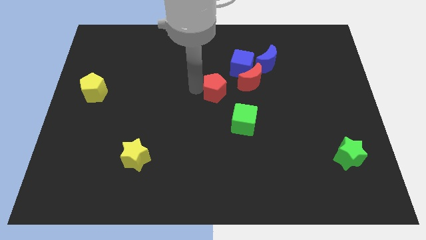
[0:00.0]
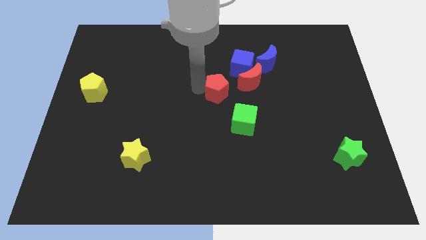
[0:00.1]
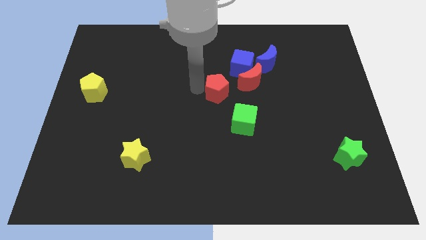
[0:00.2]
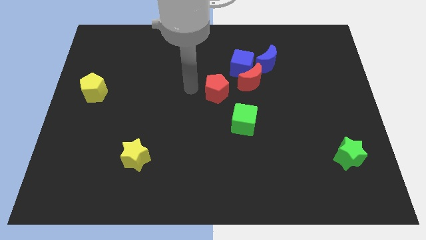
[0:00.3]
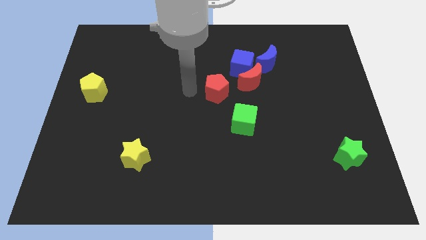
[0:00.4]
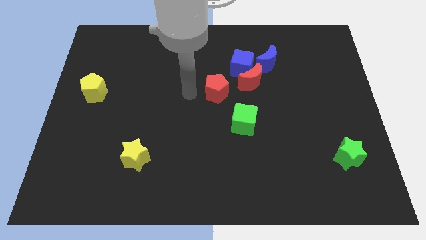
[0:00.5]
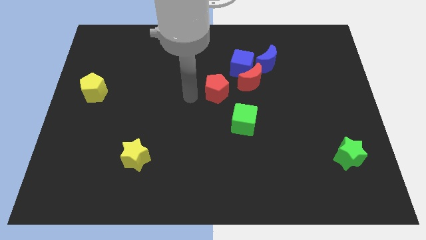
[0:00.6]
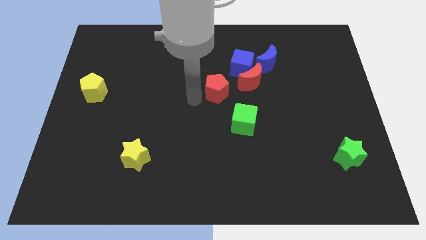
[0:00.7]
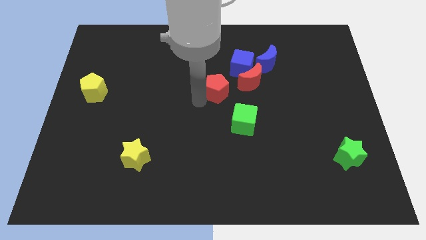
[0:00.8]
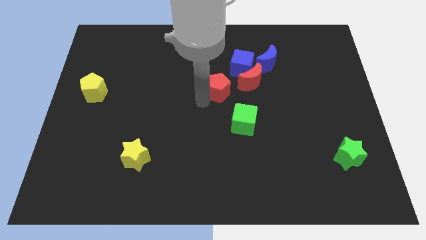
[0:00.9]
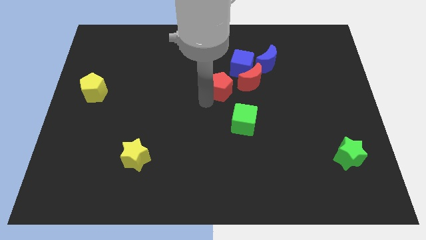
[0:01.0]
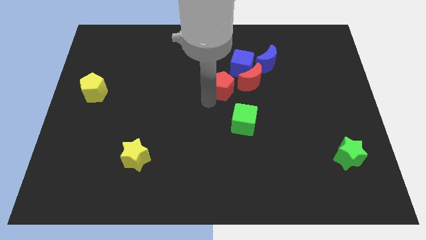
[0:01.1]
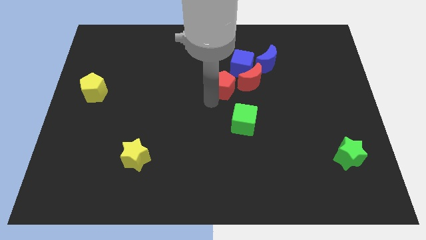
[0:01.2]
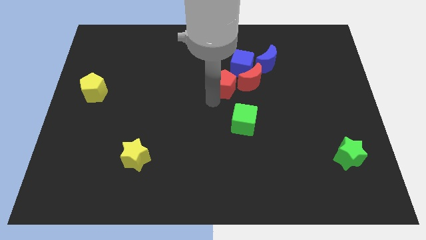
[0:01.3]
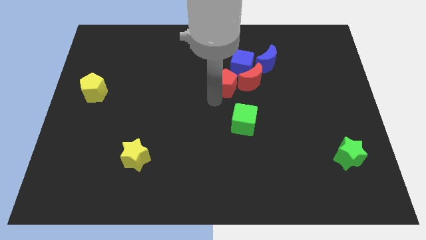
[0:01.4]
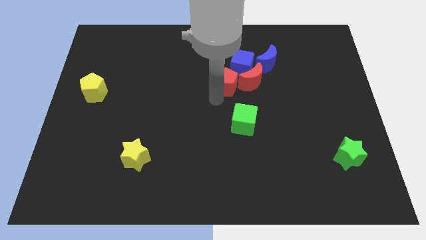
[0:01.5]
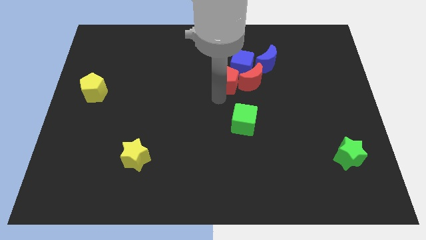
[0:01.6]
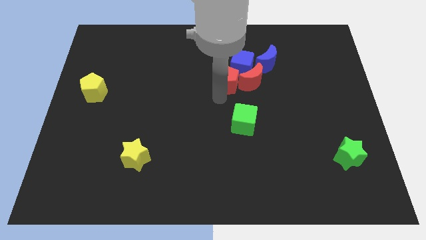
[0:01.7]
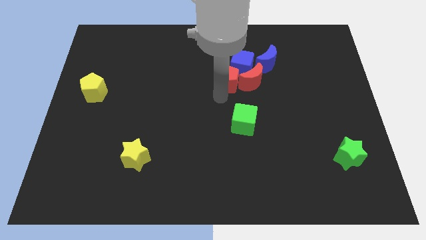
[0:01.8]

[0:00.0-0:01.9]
move red pentagon into red moon

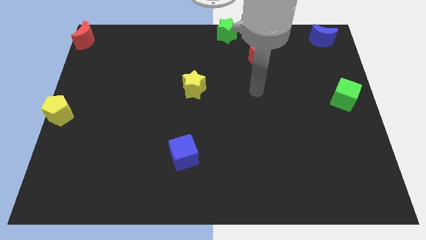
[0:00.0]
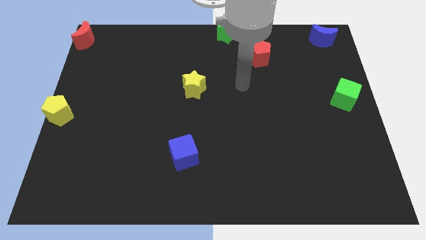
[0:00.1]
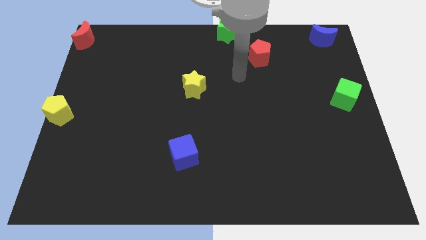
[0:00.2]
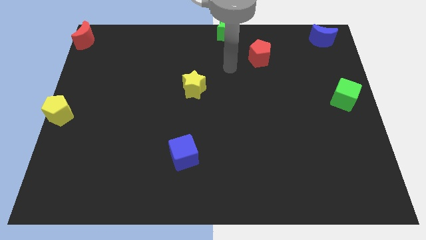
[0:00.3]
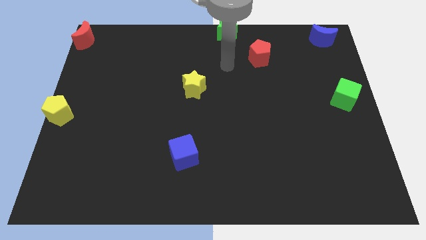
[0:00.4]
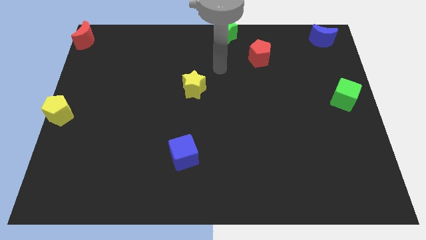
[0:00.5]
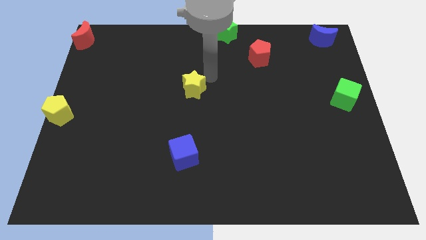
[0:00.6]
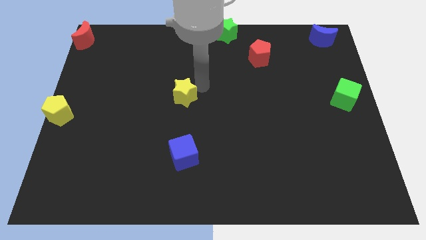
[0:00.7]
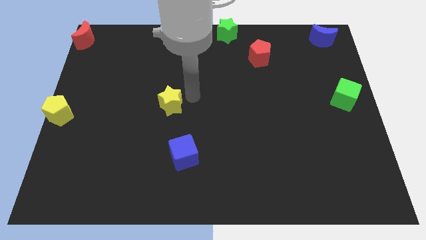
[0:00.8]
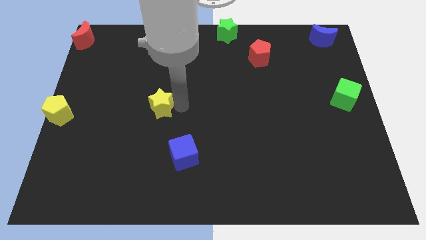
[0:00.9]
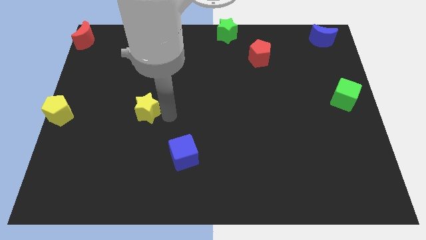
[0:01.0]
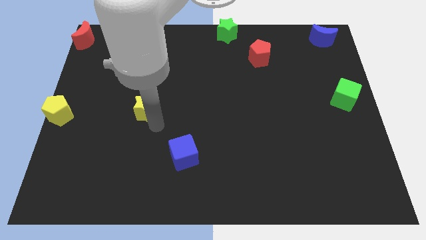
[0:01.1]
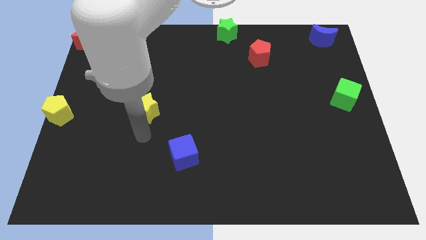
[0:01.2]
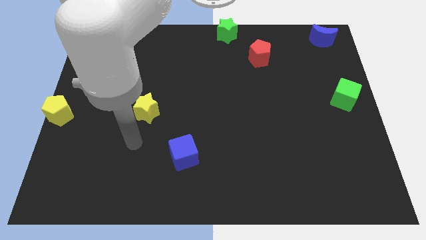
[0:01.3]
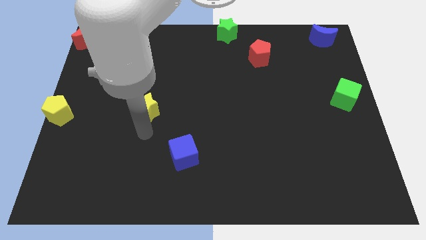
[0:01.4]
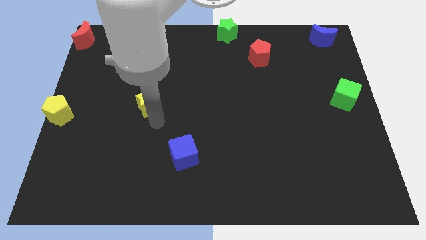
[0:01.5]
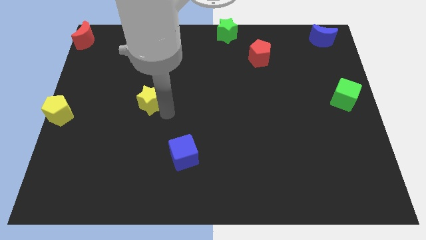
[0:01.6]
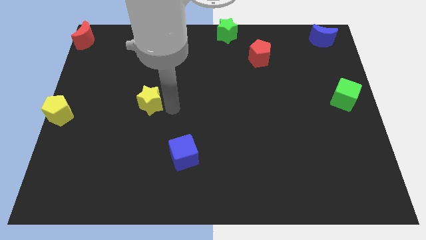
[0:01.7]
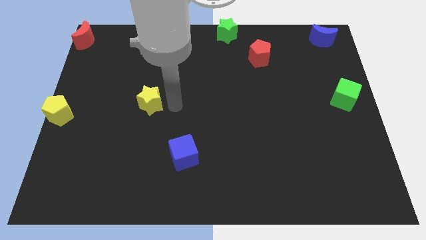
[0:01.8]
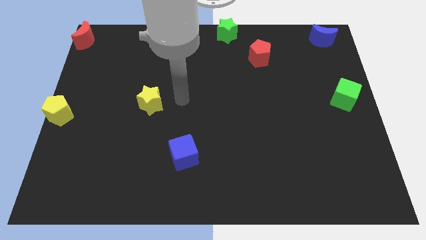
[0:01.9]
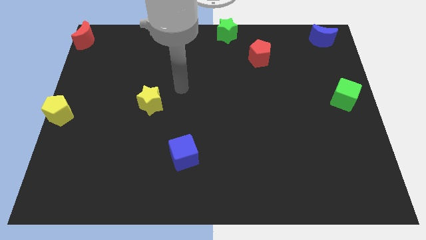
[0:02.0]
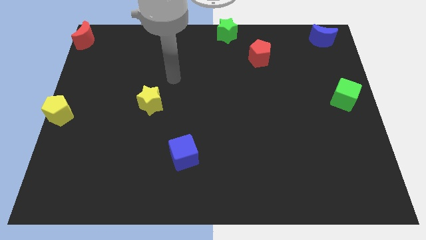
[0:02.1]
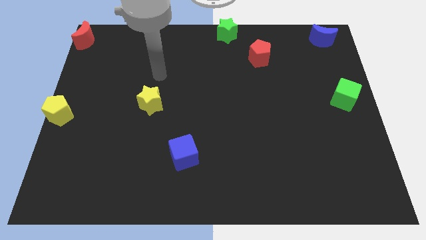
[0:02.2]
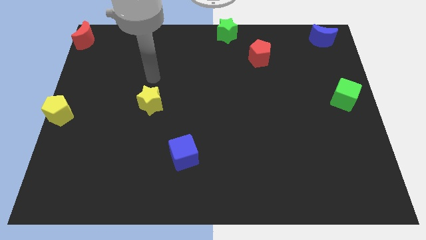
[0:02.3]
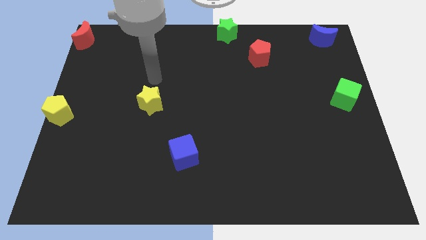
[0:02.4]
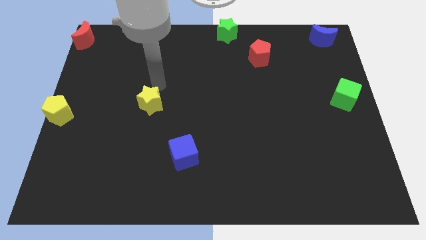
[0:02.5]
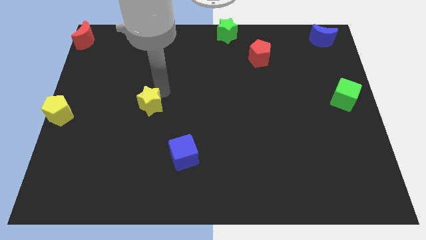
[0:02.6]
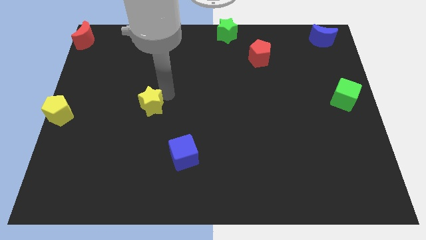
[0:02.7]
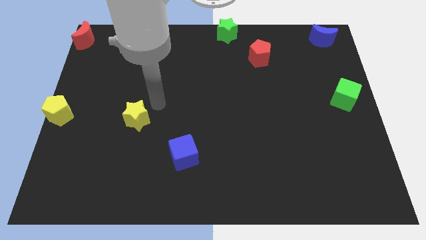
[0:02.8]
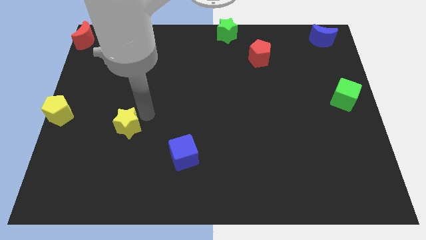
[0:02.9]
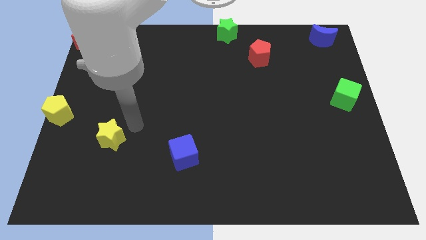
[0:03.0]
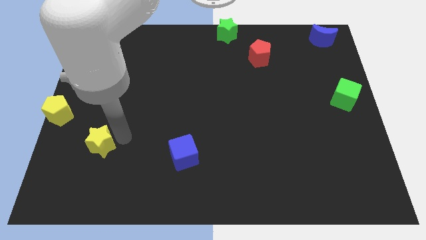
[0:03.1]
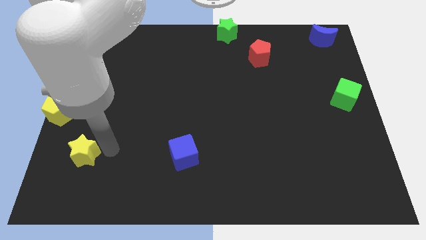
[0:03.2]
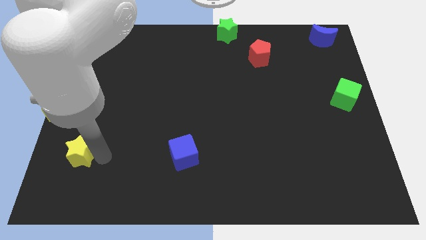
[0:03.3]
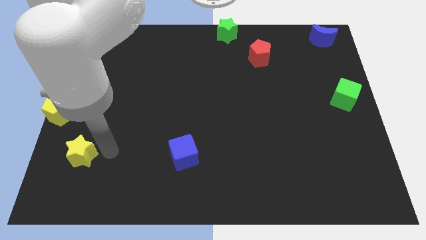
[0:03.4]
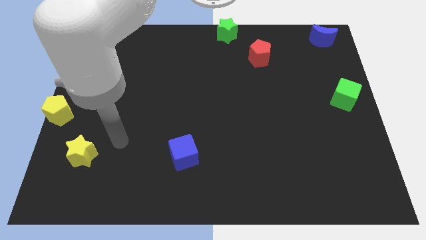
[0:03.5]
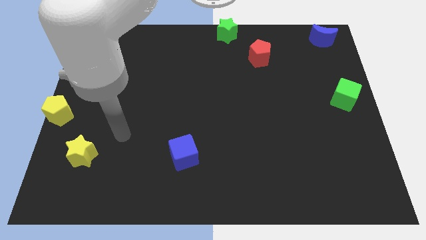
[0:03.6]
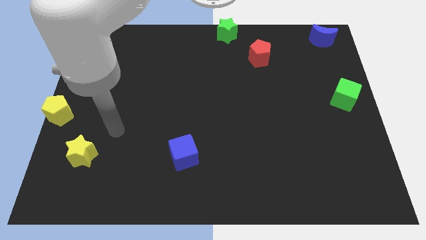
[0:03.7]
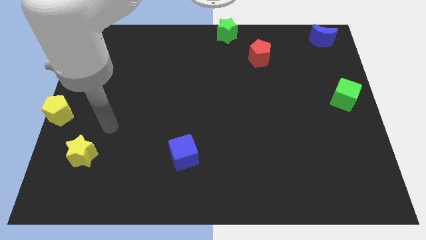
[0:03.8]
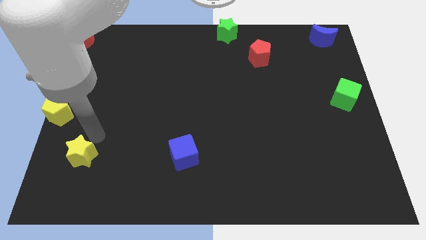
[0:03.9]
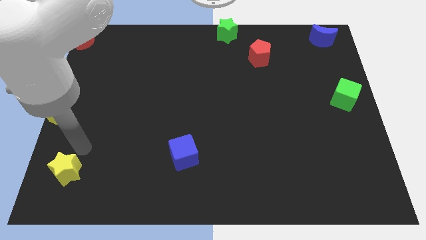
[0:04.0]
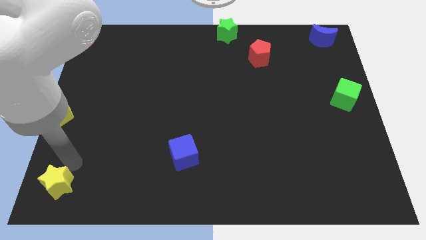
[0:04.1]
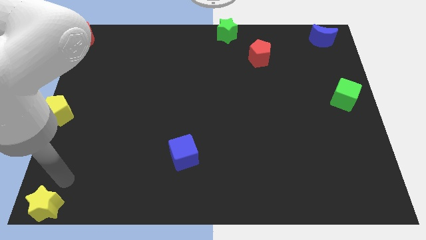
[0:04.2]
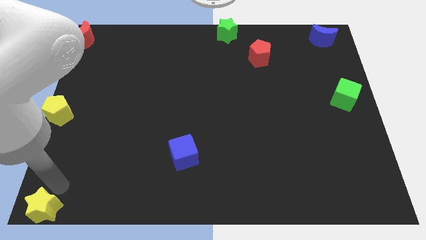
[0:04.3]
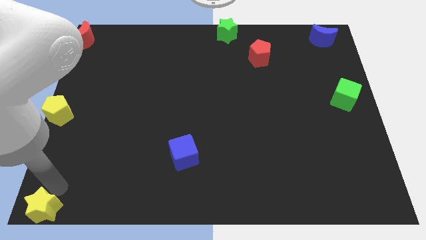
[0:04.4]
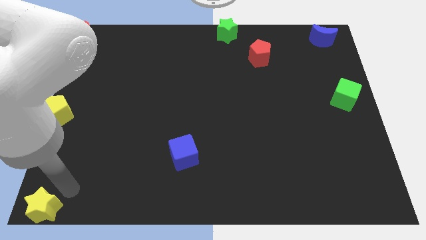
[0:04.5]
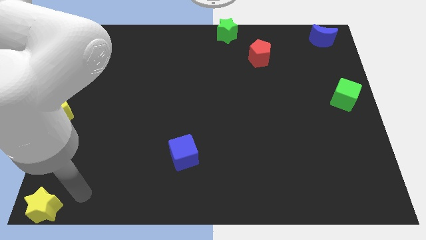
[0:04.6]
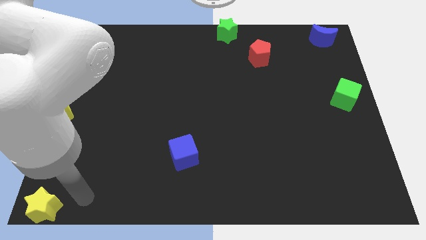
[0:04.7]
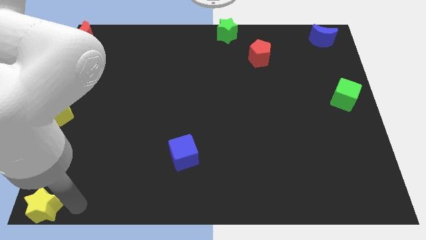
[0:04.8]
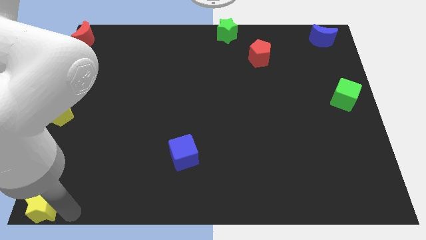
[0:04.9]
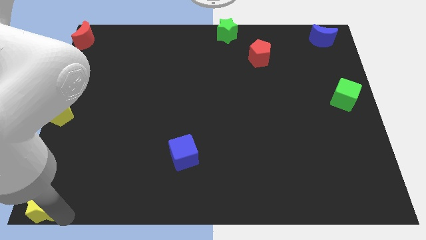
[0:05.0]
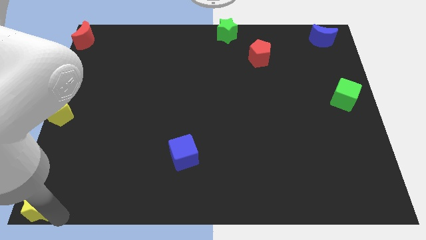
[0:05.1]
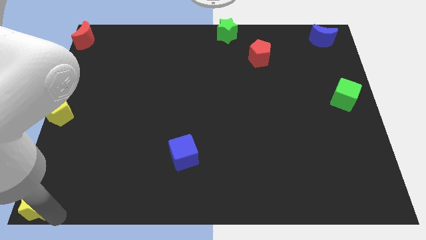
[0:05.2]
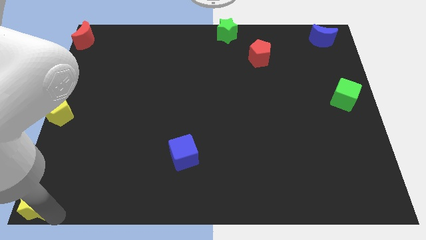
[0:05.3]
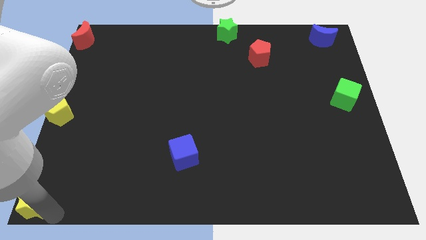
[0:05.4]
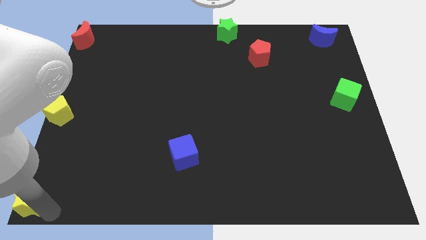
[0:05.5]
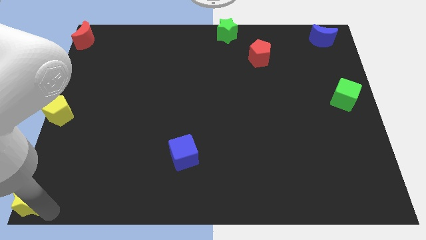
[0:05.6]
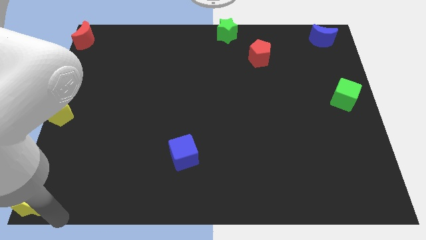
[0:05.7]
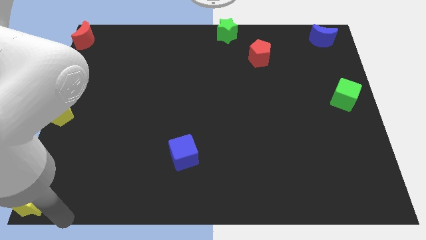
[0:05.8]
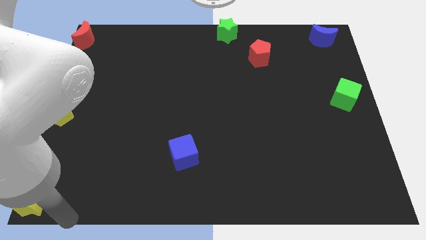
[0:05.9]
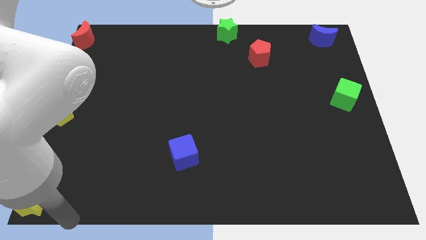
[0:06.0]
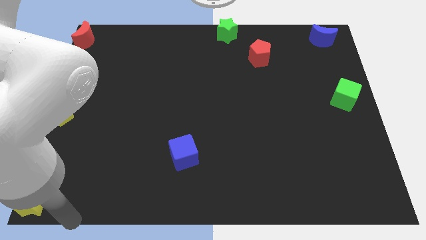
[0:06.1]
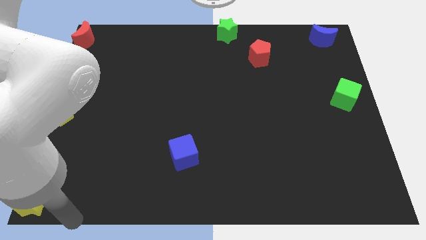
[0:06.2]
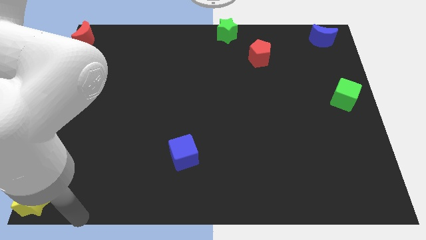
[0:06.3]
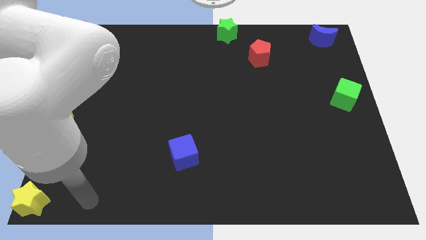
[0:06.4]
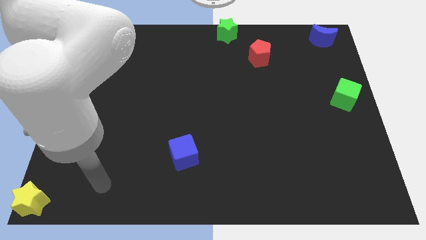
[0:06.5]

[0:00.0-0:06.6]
push the yellow star to the bottom left corner

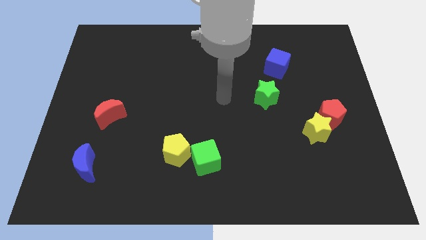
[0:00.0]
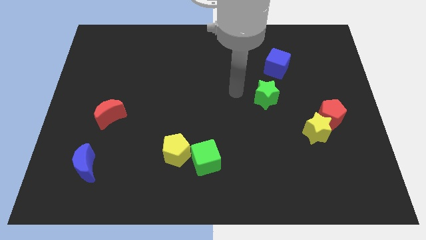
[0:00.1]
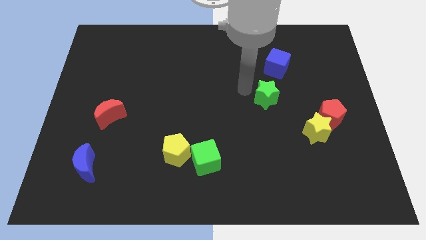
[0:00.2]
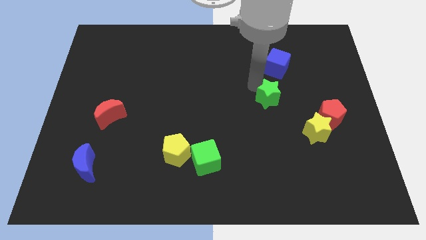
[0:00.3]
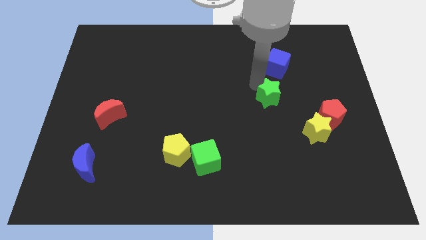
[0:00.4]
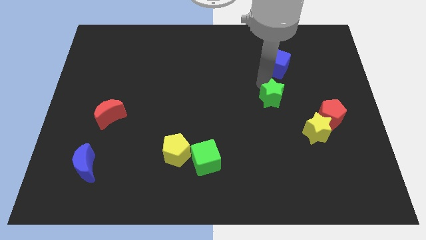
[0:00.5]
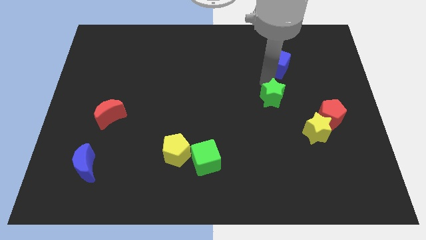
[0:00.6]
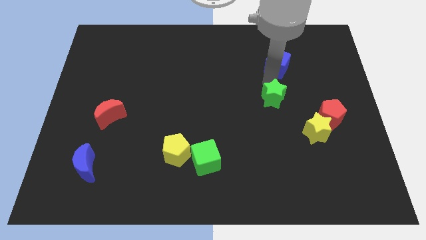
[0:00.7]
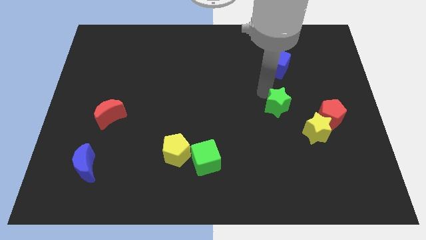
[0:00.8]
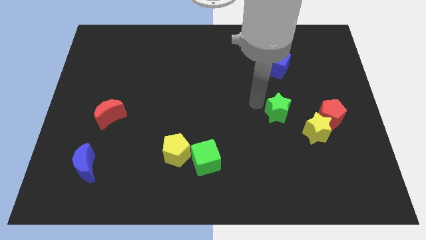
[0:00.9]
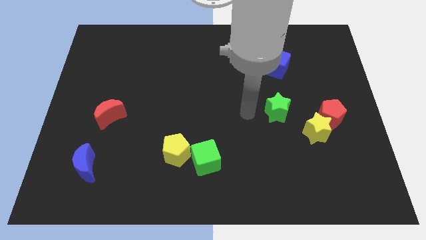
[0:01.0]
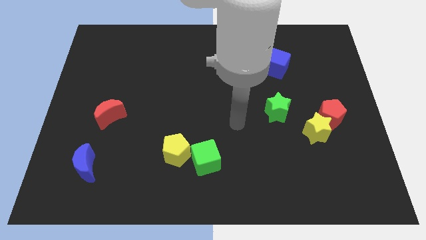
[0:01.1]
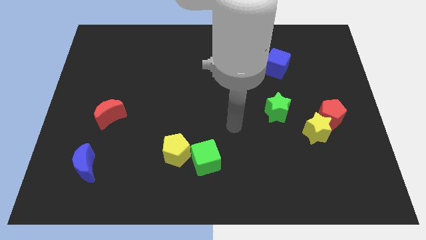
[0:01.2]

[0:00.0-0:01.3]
slide the green star vertically below the blue cube
